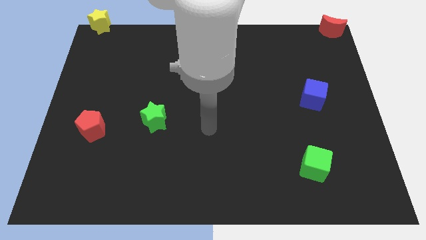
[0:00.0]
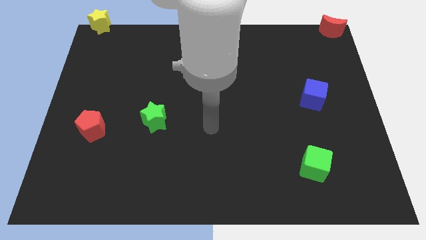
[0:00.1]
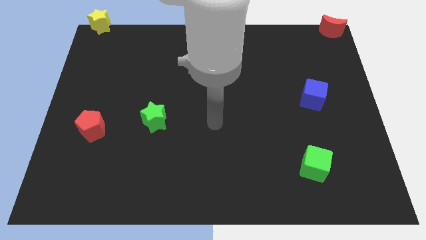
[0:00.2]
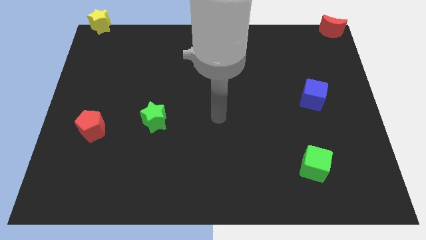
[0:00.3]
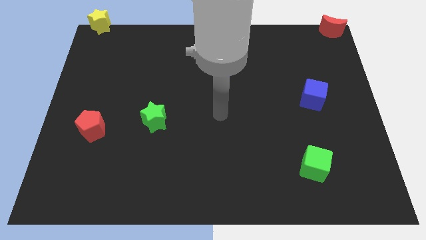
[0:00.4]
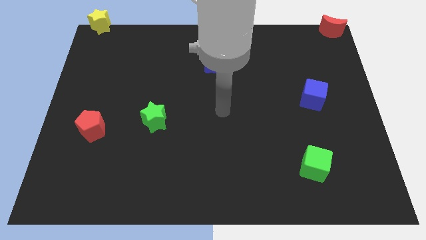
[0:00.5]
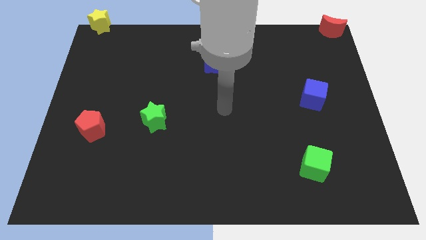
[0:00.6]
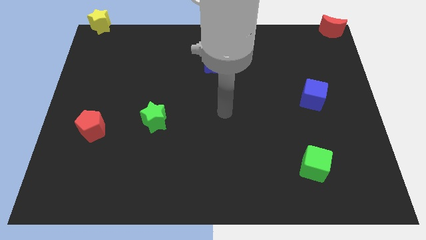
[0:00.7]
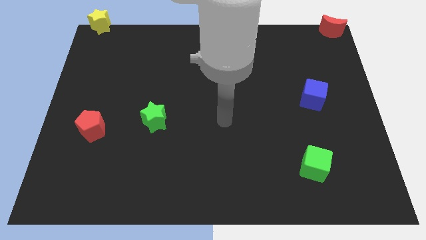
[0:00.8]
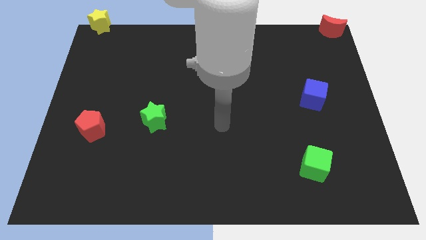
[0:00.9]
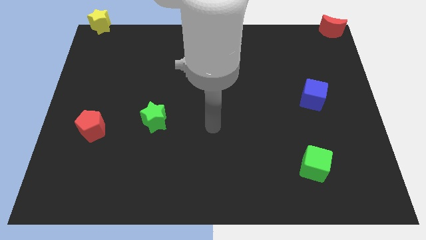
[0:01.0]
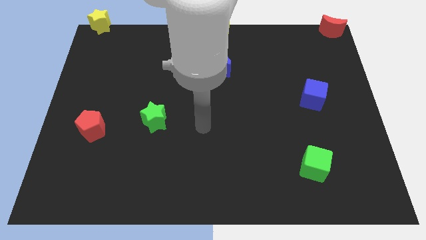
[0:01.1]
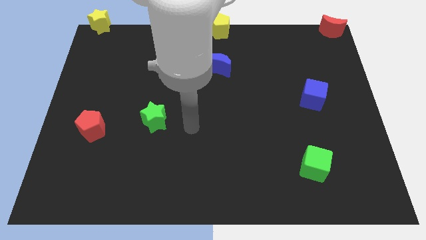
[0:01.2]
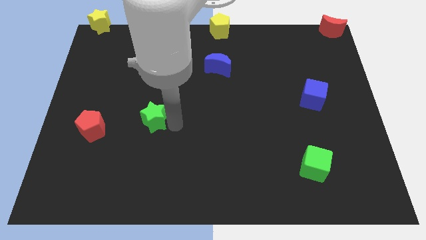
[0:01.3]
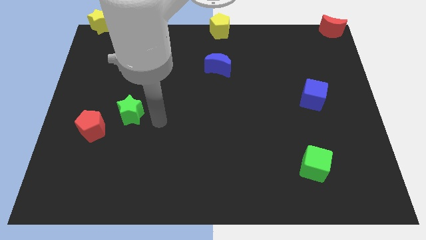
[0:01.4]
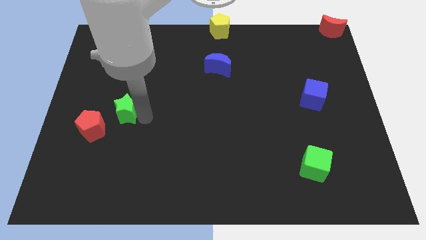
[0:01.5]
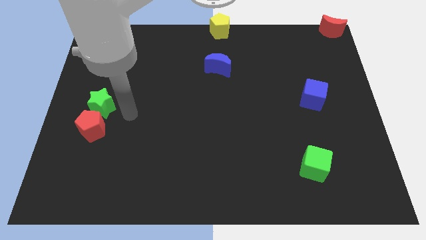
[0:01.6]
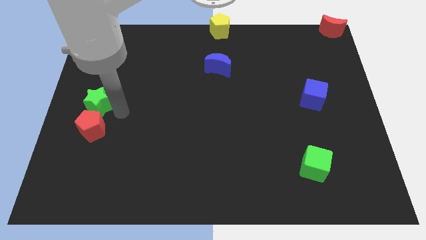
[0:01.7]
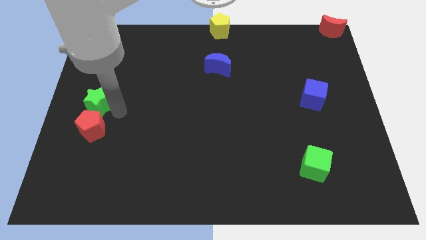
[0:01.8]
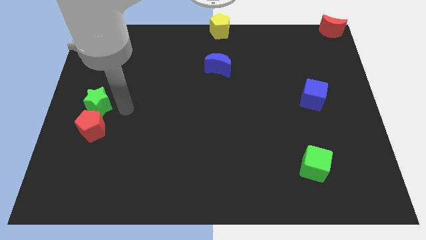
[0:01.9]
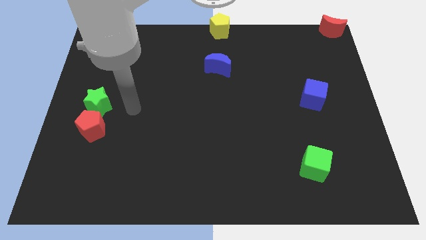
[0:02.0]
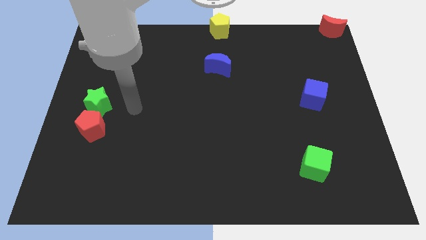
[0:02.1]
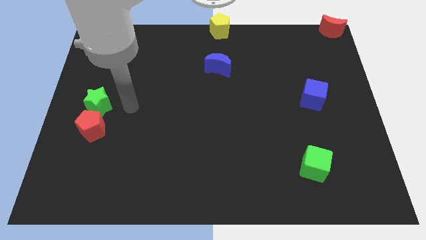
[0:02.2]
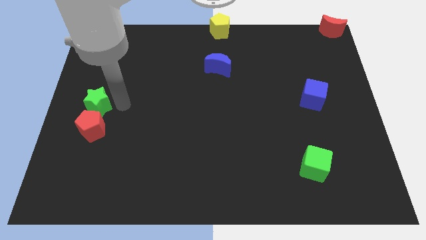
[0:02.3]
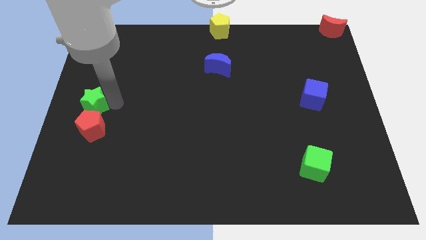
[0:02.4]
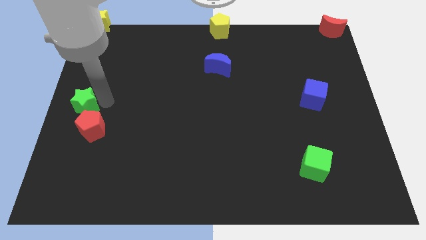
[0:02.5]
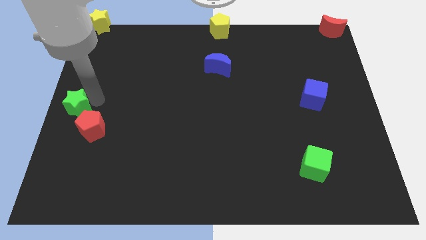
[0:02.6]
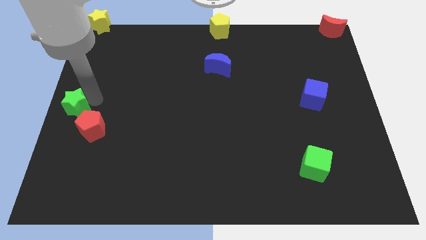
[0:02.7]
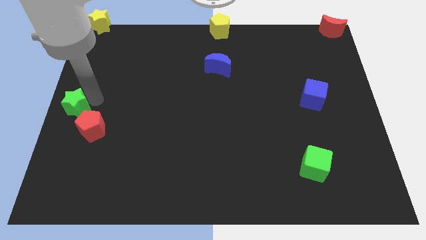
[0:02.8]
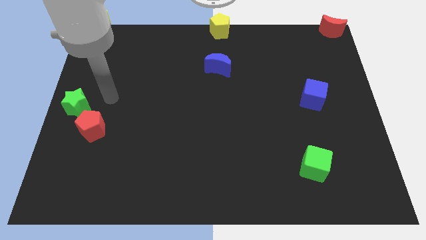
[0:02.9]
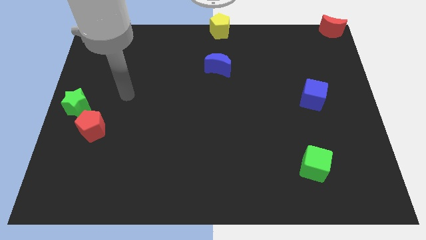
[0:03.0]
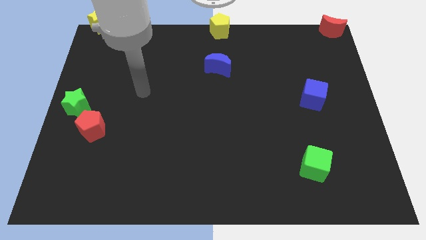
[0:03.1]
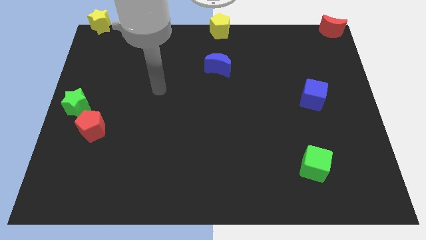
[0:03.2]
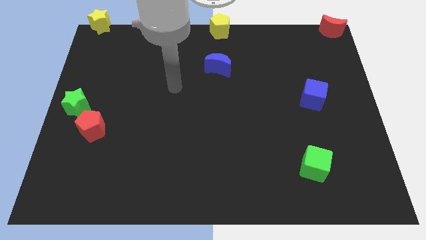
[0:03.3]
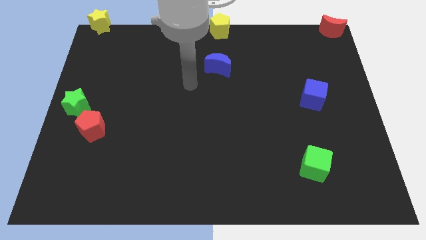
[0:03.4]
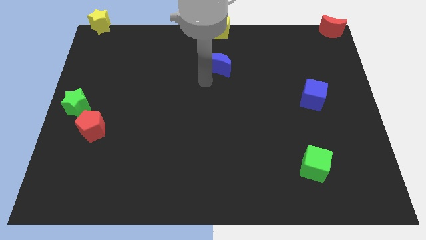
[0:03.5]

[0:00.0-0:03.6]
place green star to the top left of the red pentagon

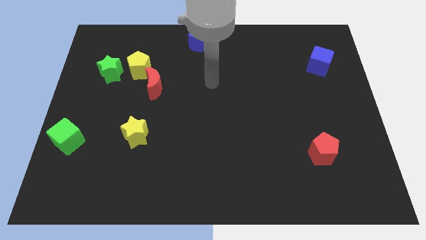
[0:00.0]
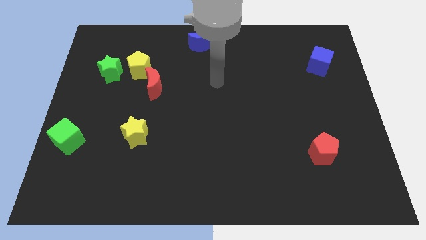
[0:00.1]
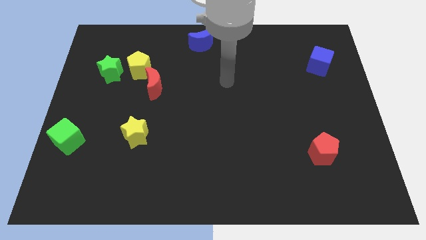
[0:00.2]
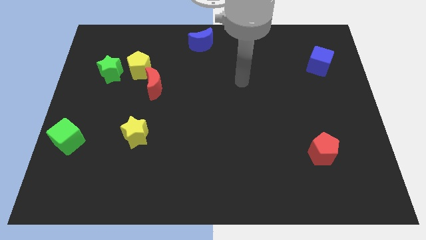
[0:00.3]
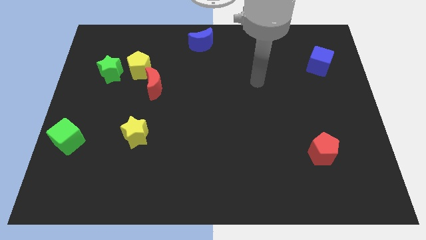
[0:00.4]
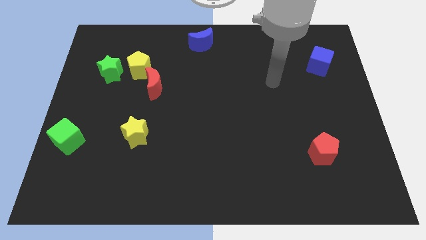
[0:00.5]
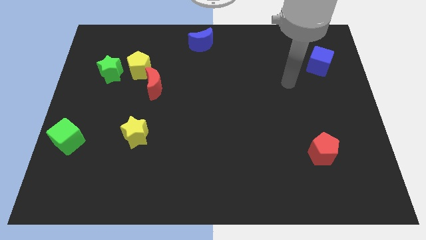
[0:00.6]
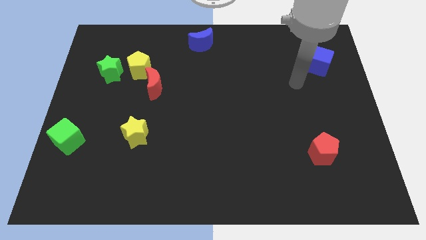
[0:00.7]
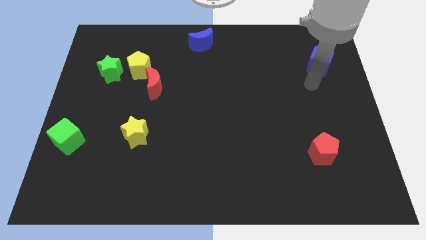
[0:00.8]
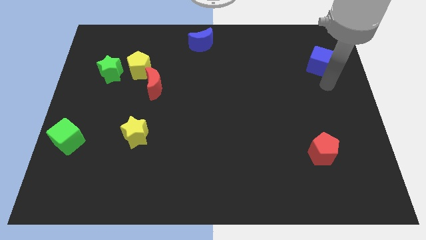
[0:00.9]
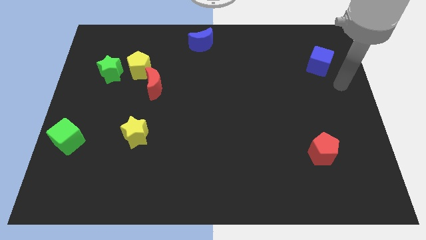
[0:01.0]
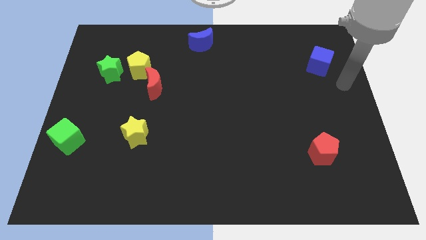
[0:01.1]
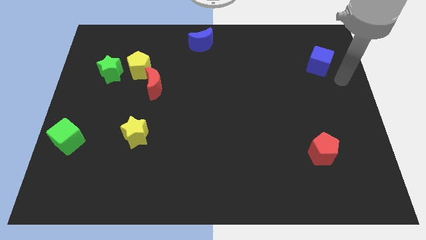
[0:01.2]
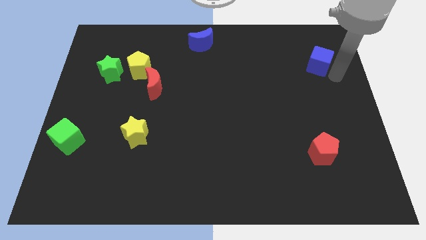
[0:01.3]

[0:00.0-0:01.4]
put your hand at the bottom right corner of the blue cube

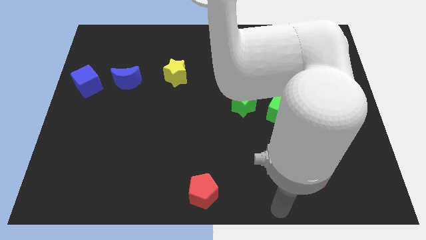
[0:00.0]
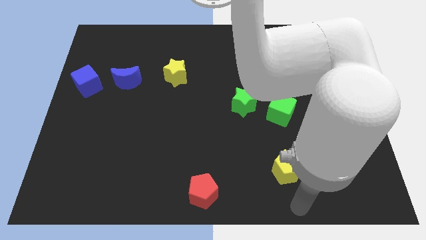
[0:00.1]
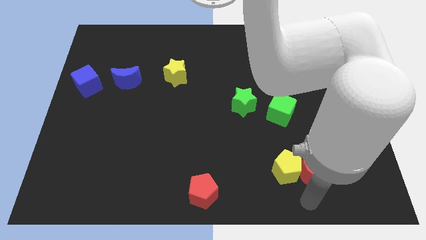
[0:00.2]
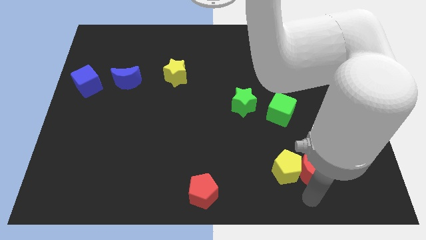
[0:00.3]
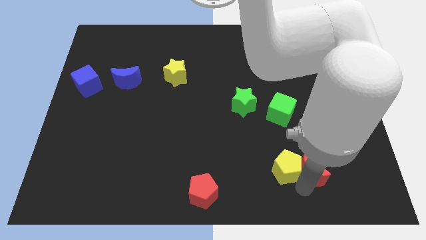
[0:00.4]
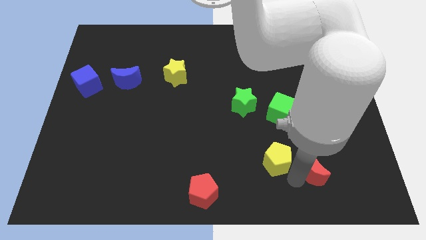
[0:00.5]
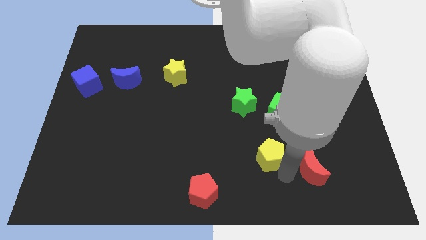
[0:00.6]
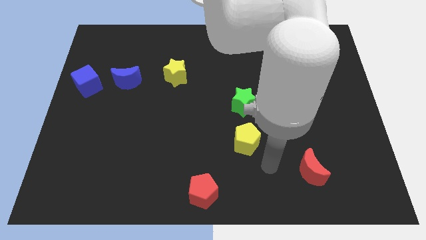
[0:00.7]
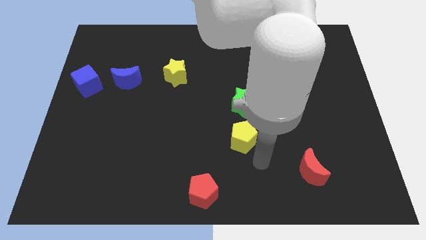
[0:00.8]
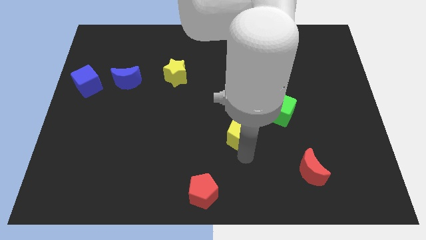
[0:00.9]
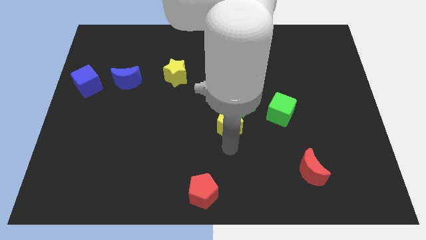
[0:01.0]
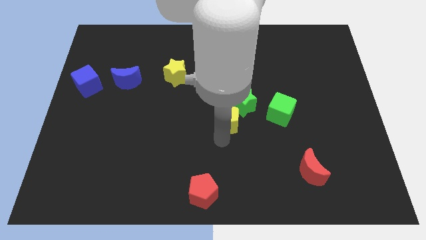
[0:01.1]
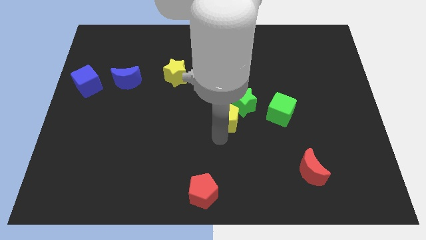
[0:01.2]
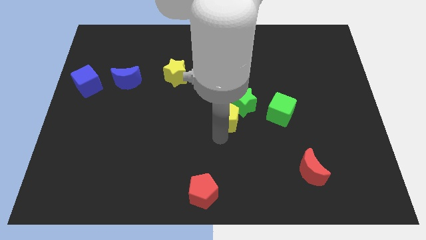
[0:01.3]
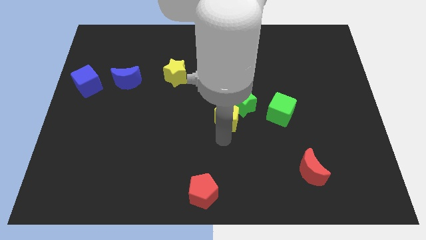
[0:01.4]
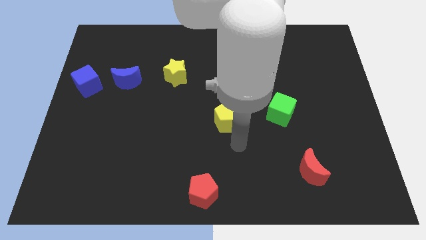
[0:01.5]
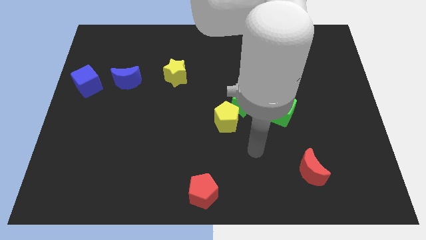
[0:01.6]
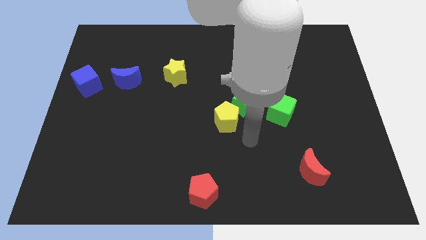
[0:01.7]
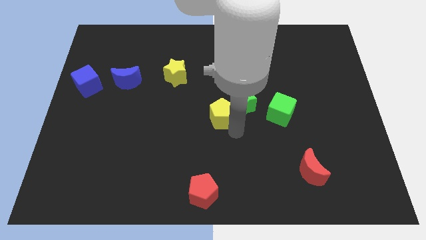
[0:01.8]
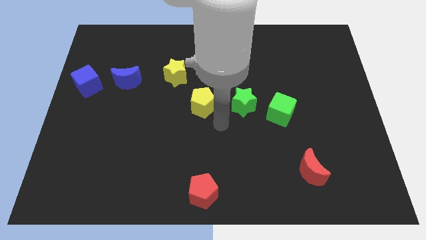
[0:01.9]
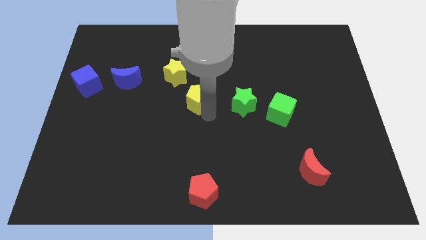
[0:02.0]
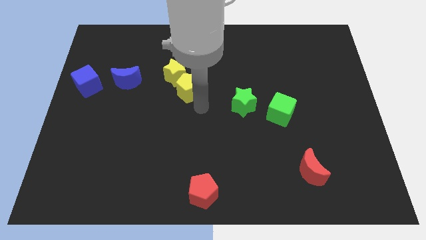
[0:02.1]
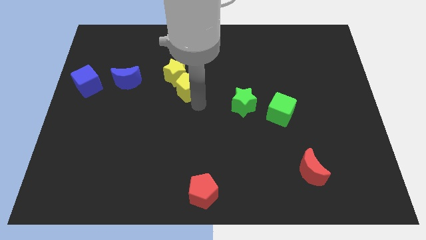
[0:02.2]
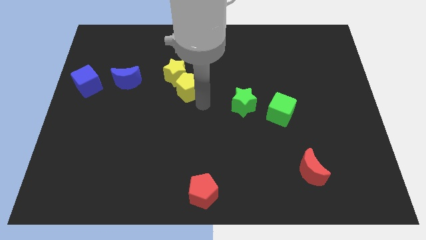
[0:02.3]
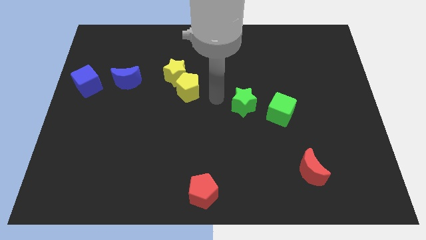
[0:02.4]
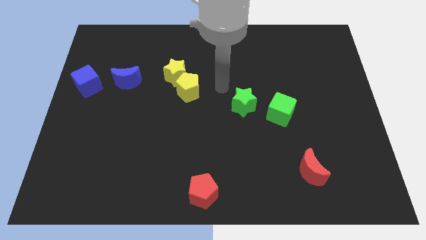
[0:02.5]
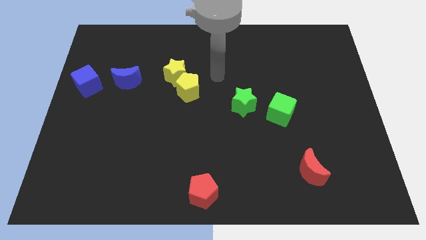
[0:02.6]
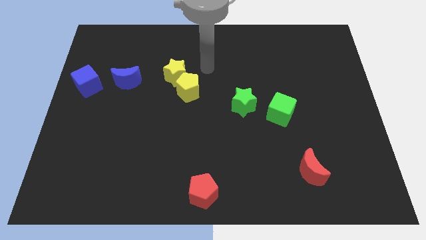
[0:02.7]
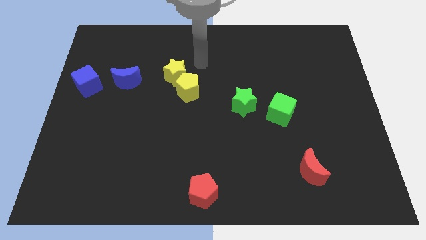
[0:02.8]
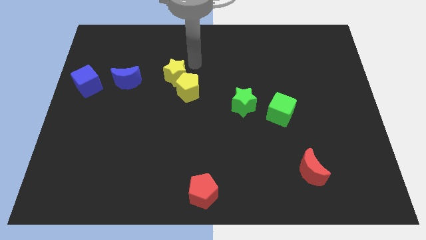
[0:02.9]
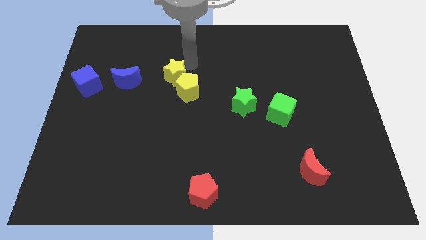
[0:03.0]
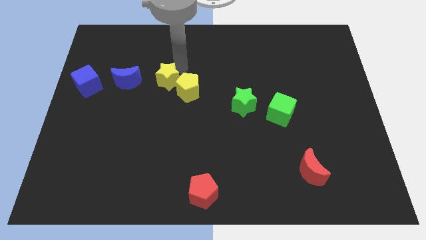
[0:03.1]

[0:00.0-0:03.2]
move the yellow pentagon diagonally to the yellow star

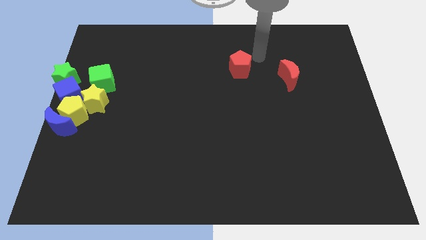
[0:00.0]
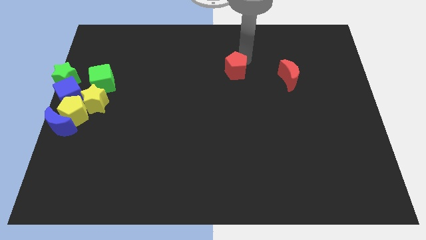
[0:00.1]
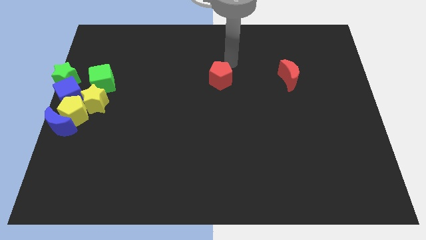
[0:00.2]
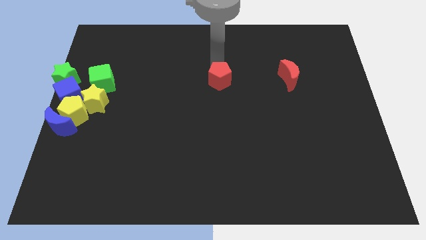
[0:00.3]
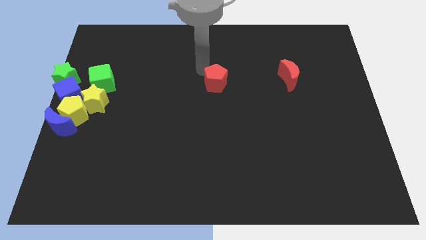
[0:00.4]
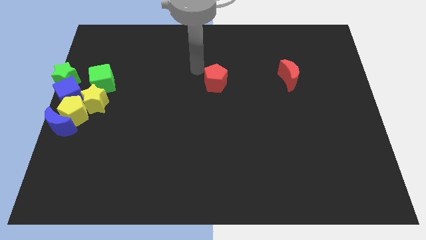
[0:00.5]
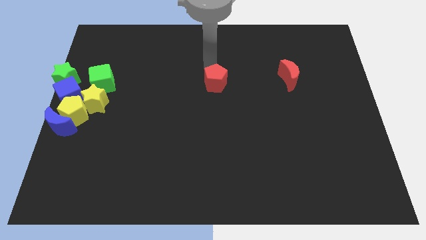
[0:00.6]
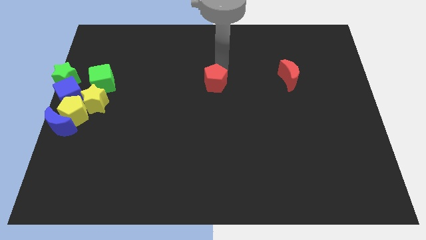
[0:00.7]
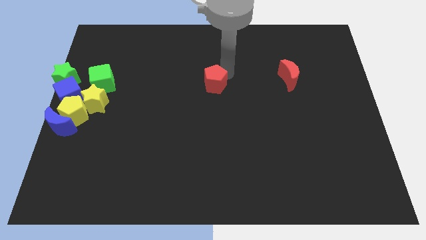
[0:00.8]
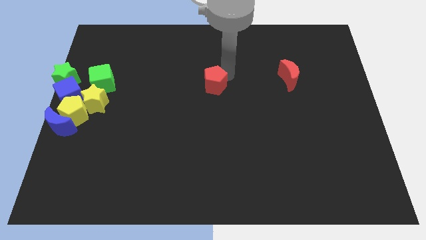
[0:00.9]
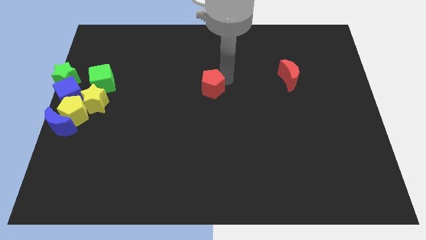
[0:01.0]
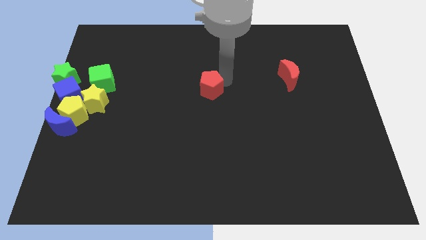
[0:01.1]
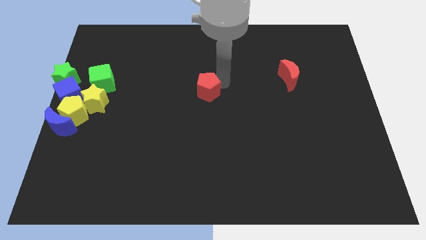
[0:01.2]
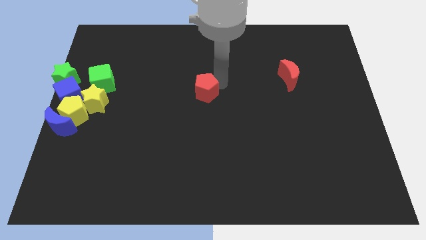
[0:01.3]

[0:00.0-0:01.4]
move the red pentagon to the center of the board
